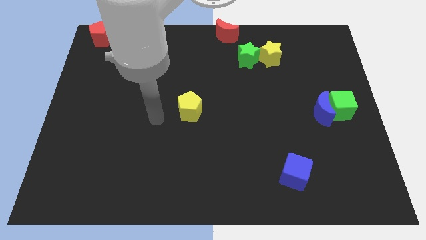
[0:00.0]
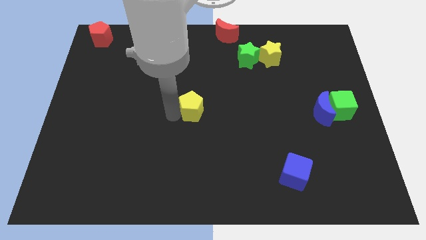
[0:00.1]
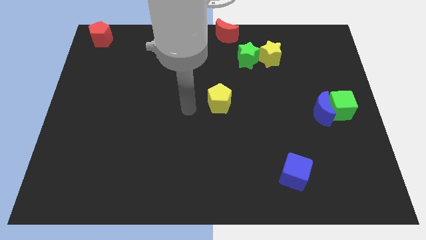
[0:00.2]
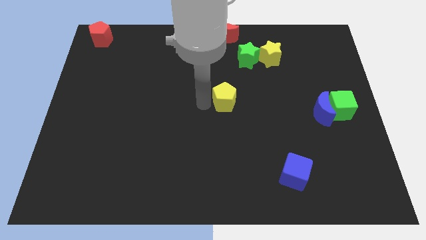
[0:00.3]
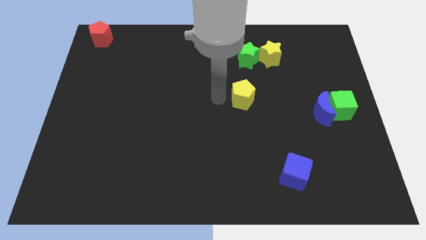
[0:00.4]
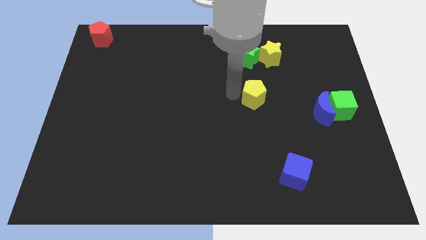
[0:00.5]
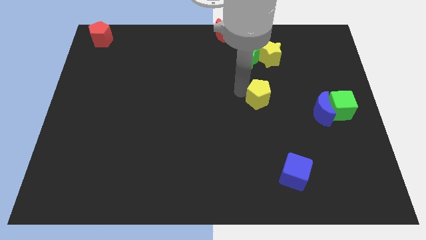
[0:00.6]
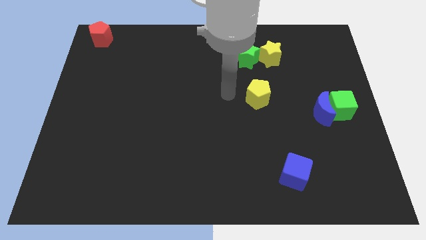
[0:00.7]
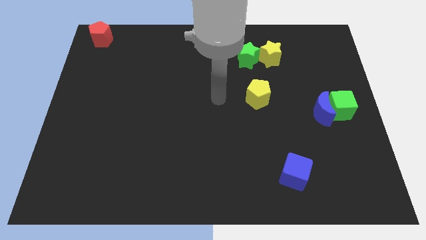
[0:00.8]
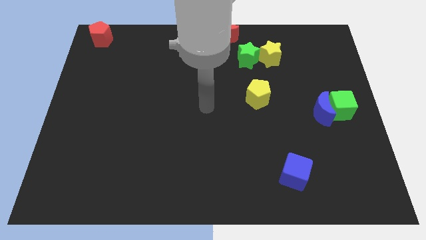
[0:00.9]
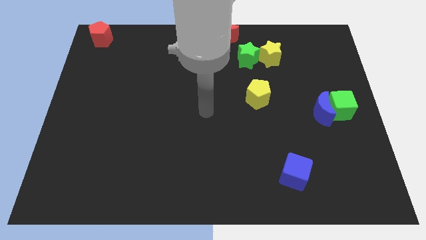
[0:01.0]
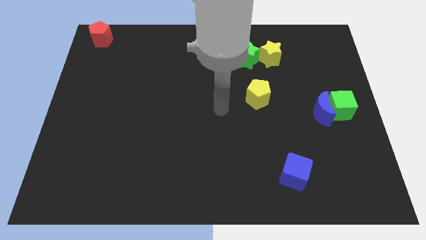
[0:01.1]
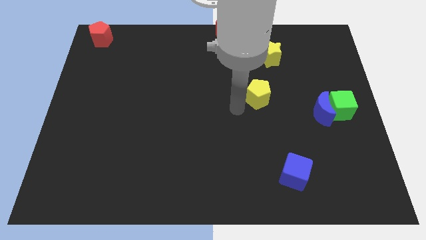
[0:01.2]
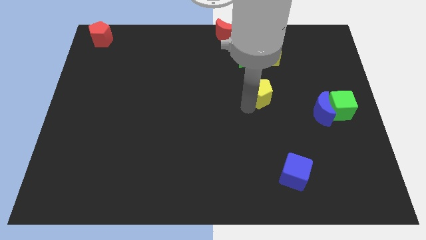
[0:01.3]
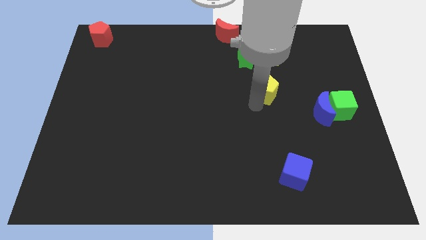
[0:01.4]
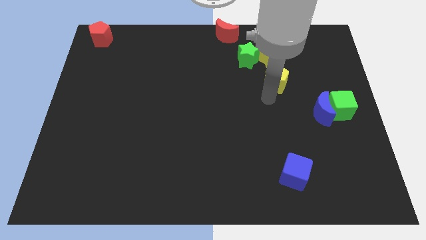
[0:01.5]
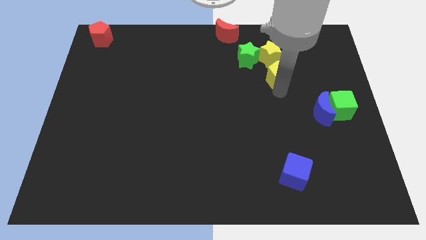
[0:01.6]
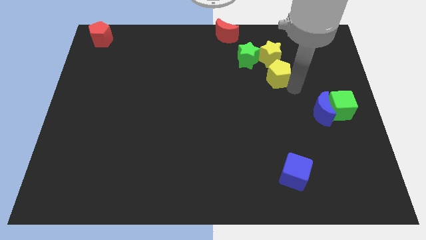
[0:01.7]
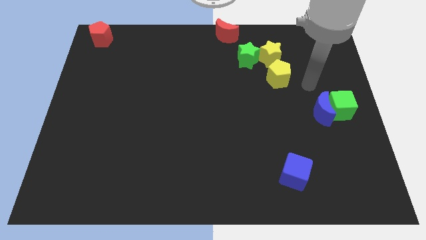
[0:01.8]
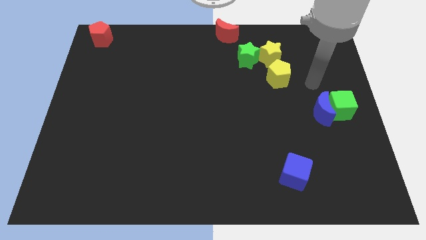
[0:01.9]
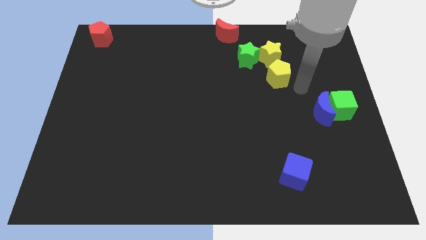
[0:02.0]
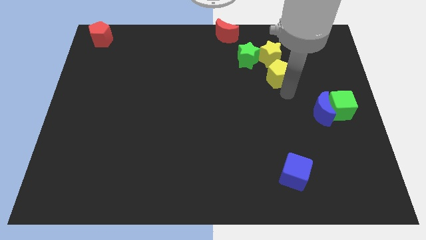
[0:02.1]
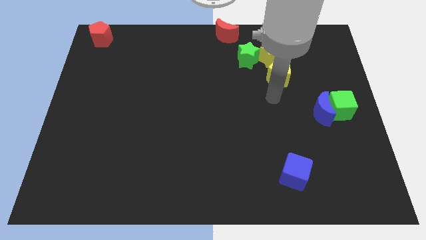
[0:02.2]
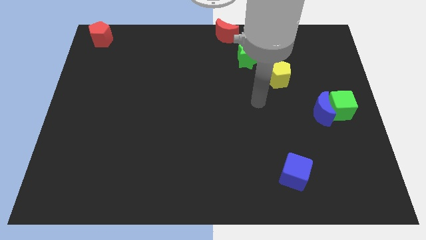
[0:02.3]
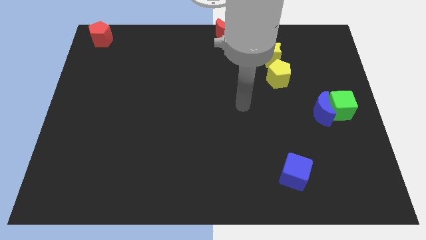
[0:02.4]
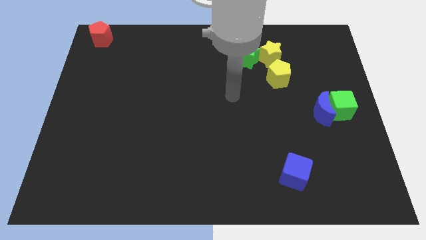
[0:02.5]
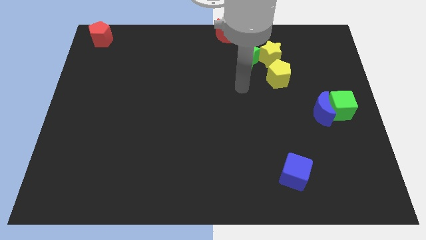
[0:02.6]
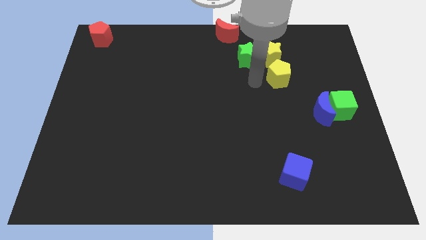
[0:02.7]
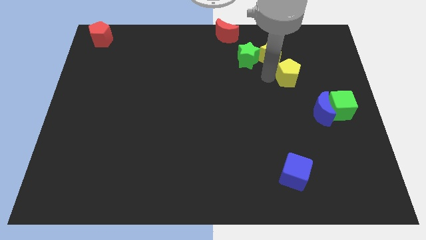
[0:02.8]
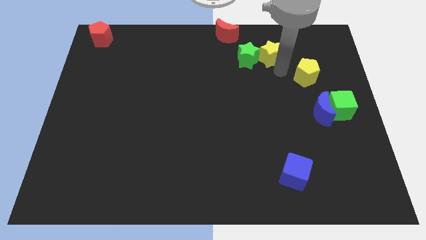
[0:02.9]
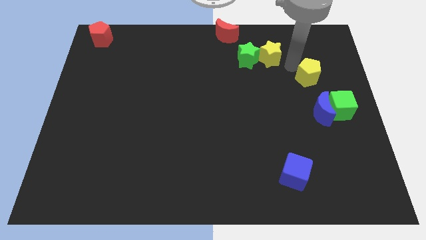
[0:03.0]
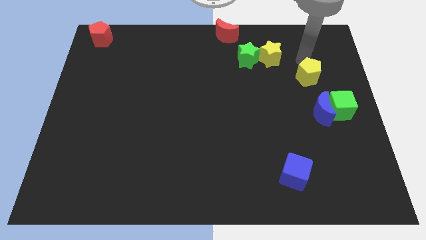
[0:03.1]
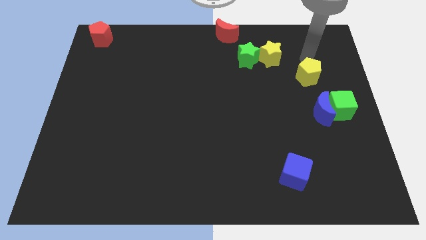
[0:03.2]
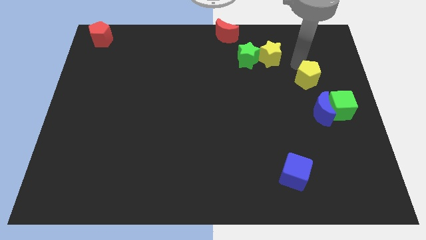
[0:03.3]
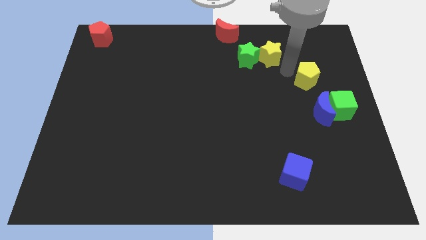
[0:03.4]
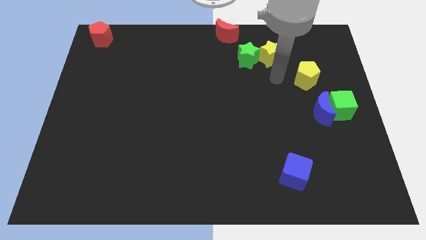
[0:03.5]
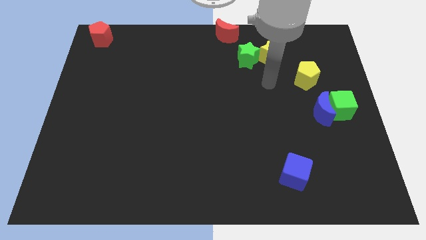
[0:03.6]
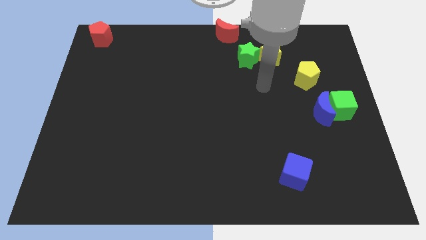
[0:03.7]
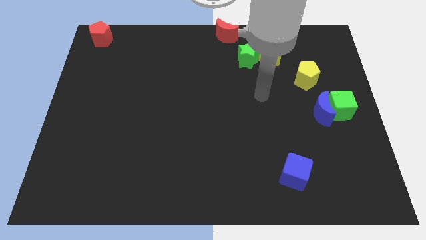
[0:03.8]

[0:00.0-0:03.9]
push the yellow pentagon towards top right

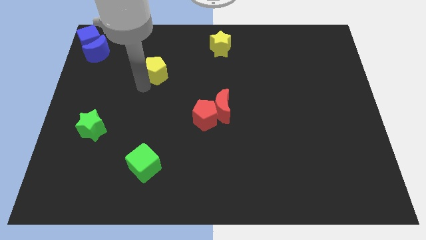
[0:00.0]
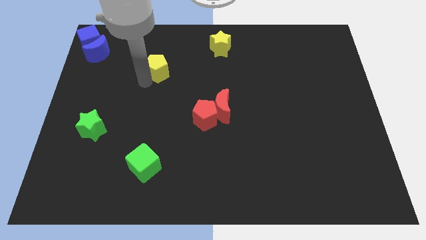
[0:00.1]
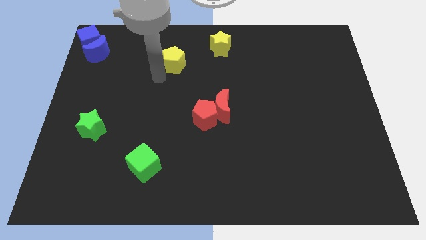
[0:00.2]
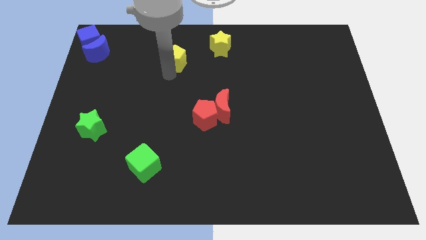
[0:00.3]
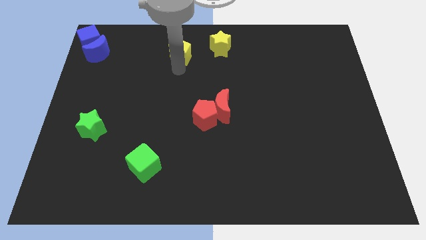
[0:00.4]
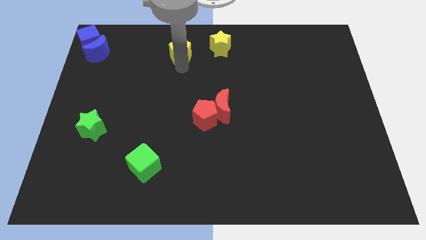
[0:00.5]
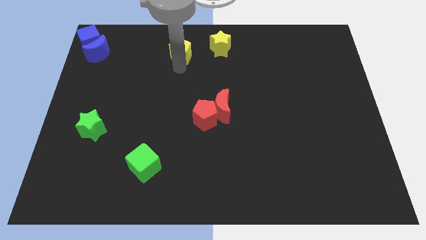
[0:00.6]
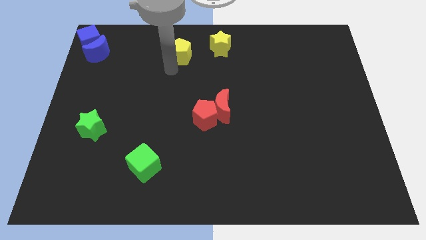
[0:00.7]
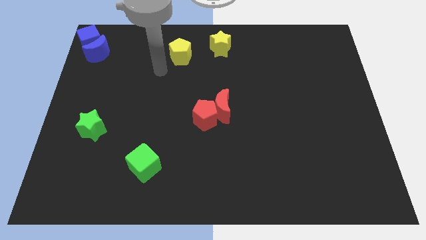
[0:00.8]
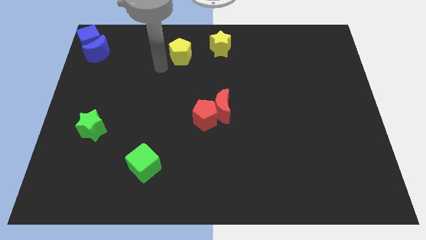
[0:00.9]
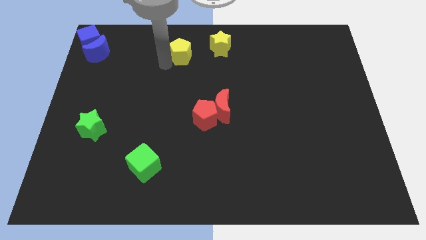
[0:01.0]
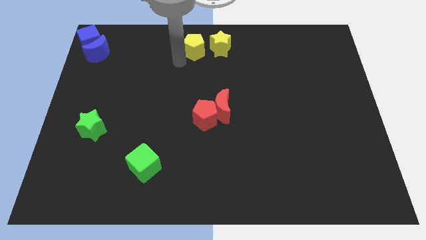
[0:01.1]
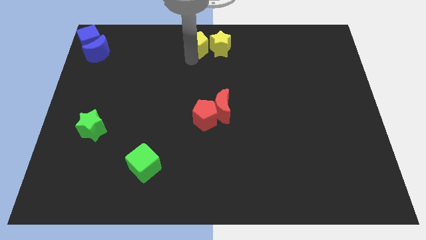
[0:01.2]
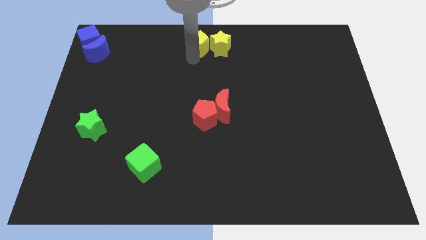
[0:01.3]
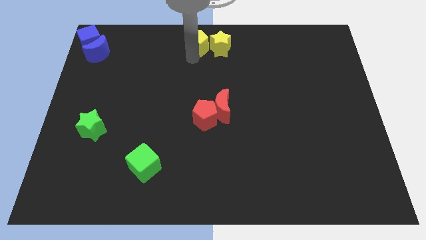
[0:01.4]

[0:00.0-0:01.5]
move the yellow pentagon at the top center

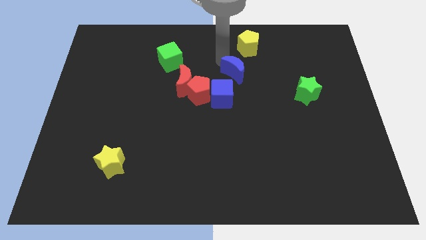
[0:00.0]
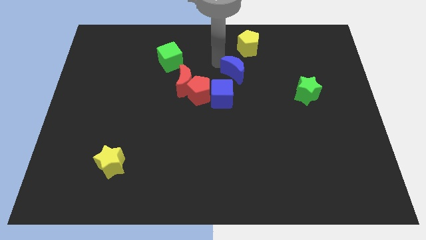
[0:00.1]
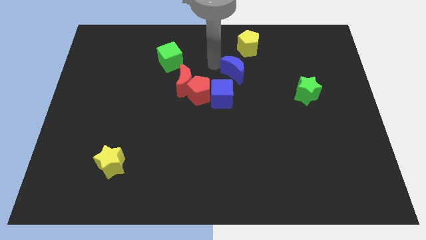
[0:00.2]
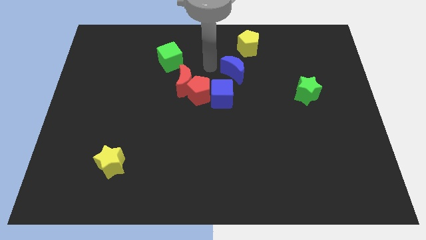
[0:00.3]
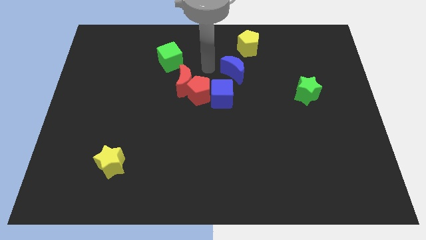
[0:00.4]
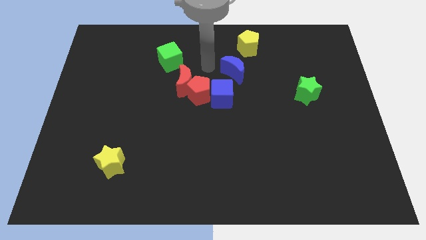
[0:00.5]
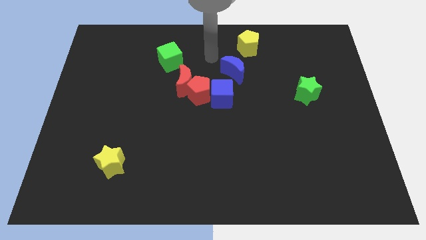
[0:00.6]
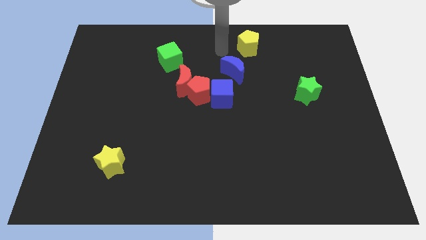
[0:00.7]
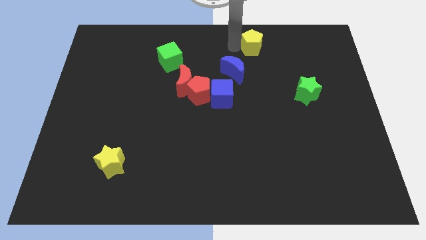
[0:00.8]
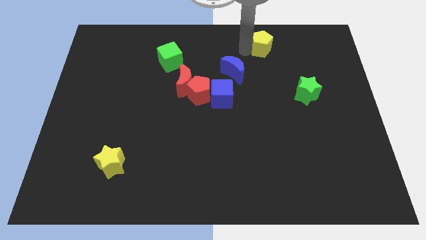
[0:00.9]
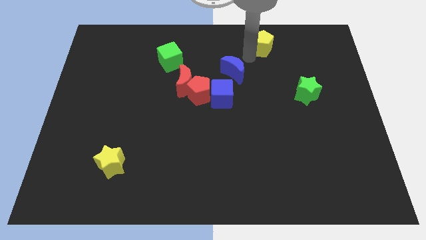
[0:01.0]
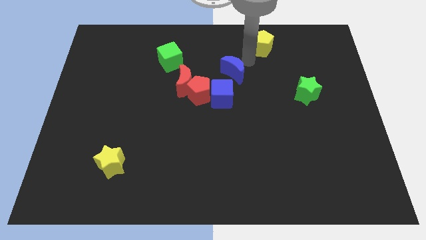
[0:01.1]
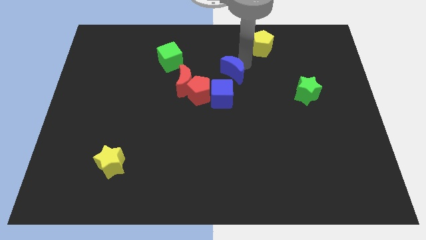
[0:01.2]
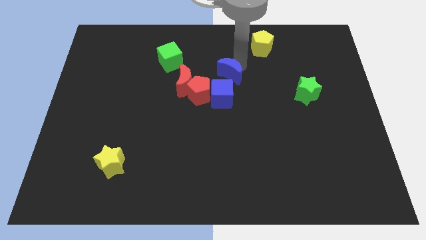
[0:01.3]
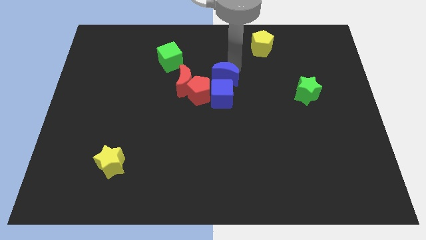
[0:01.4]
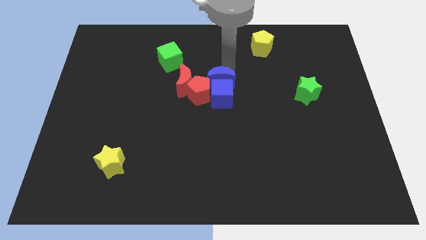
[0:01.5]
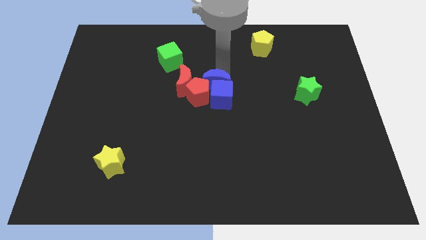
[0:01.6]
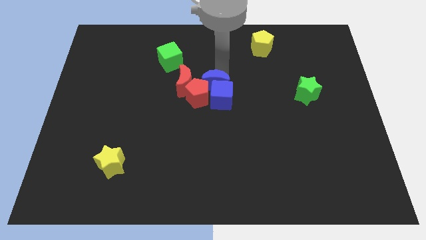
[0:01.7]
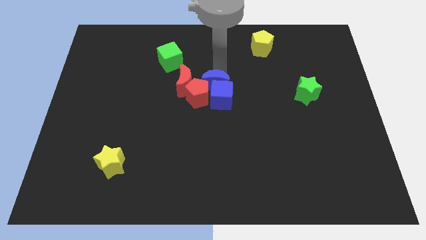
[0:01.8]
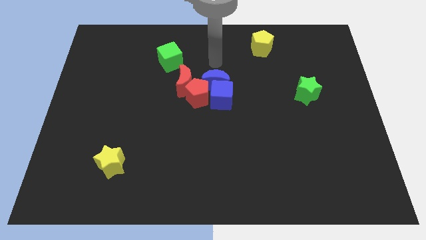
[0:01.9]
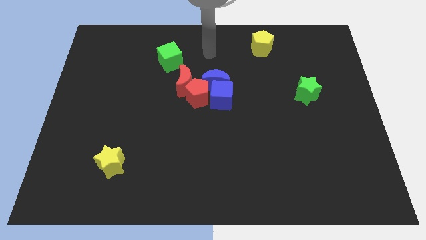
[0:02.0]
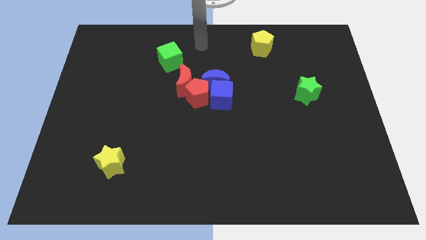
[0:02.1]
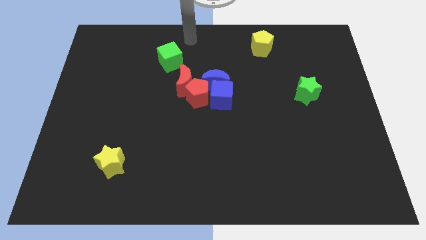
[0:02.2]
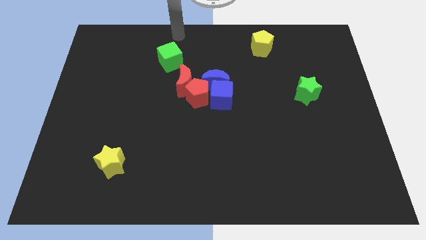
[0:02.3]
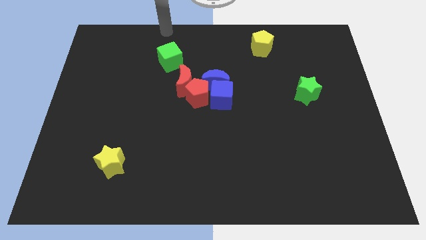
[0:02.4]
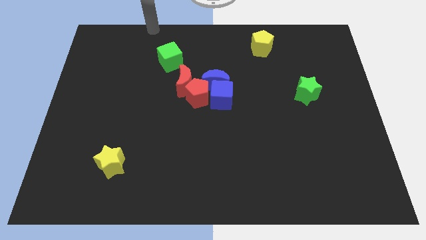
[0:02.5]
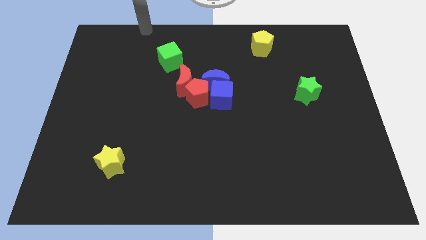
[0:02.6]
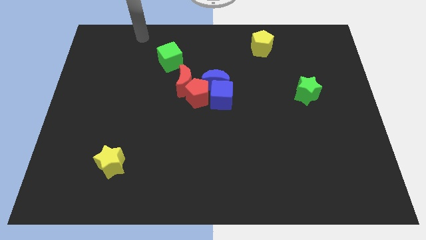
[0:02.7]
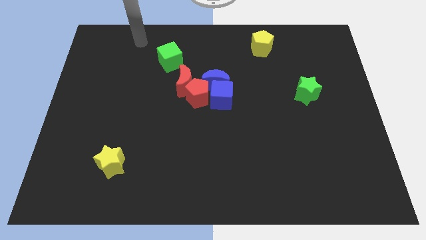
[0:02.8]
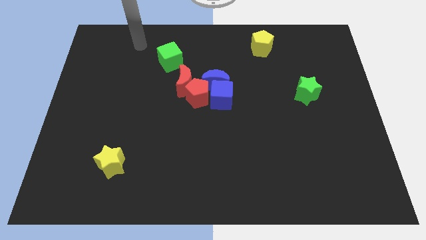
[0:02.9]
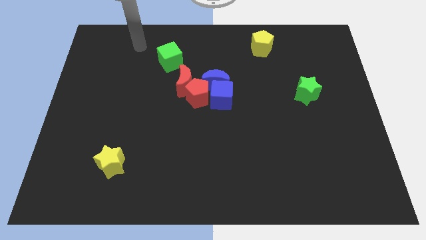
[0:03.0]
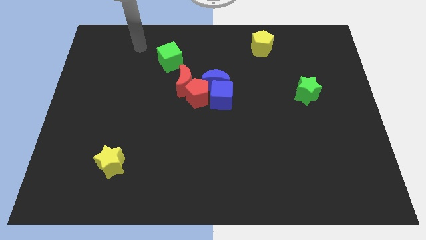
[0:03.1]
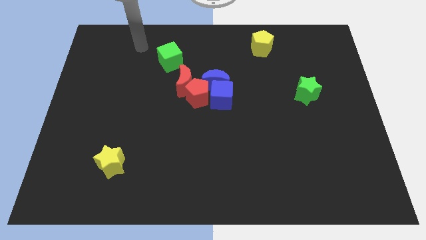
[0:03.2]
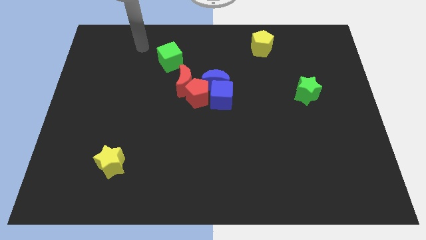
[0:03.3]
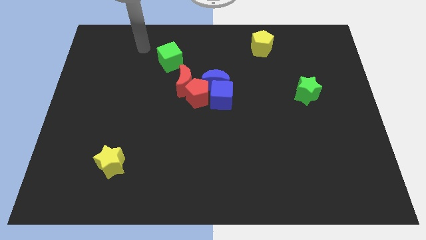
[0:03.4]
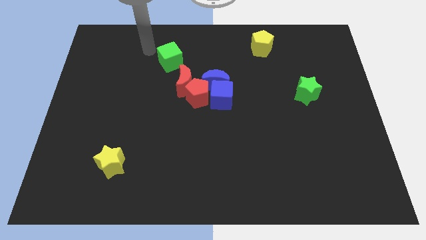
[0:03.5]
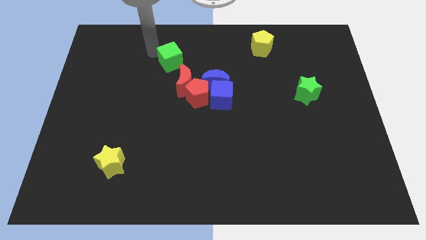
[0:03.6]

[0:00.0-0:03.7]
push the blue crescent into the blue cube
